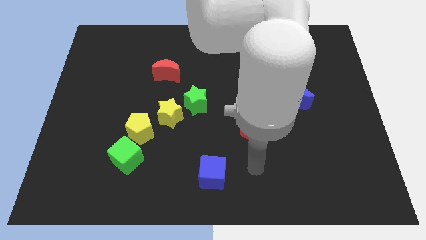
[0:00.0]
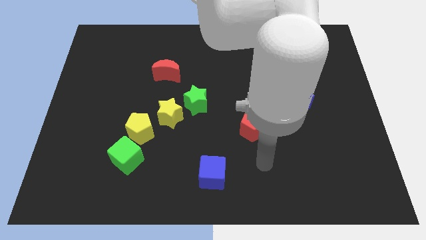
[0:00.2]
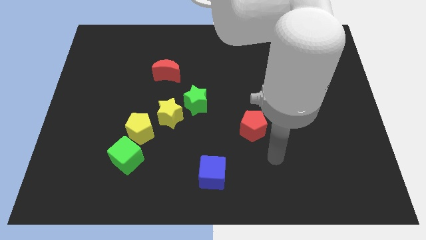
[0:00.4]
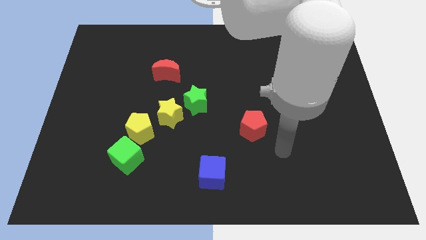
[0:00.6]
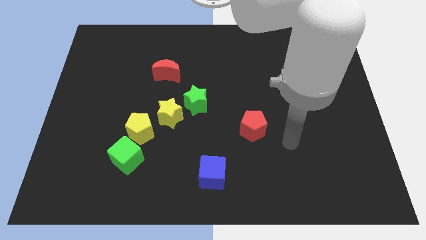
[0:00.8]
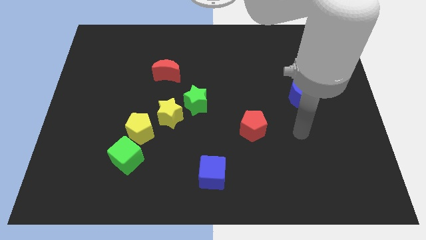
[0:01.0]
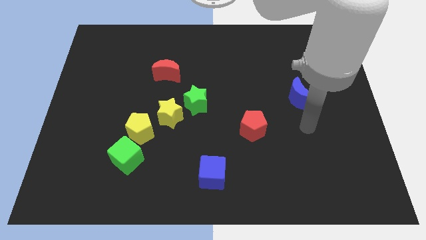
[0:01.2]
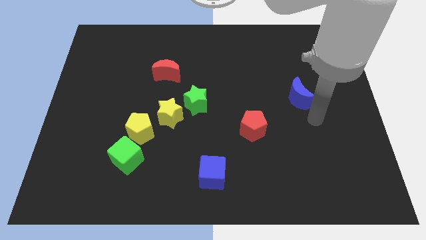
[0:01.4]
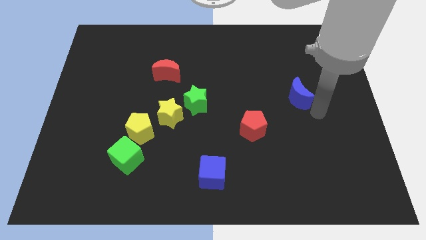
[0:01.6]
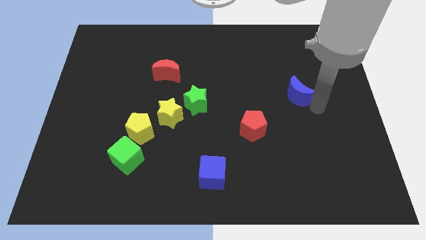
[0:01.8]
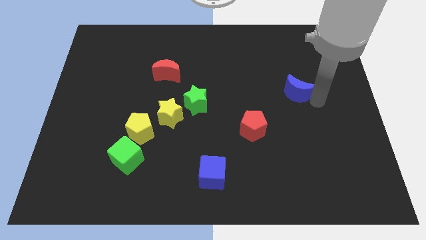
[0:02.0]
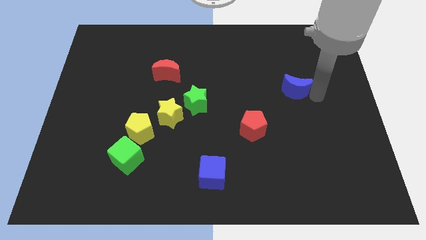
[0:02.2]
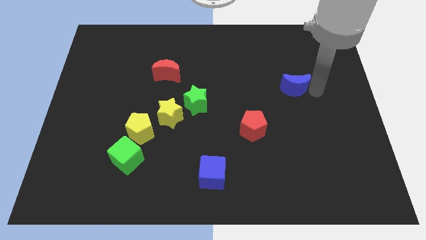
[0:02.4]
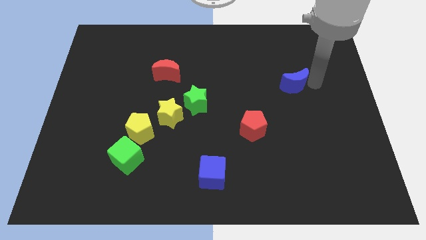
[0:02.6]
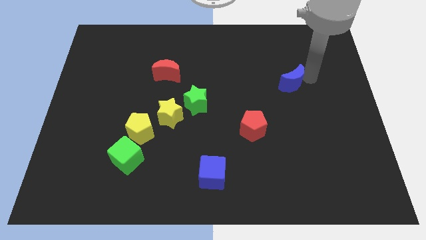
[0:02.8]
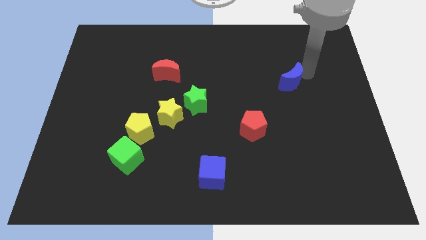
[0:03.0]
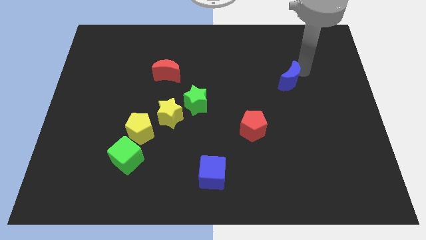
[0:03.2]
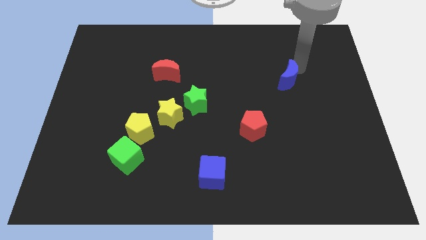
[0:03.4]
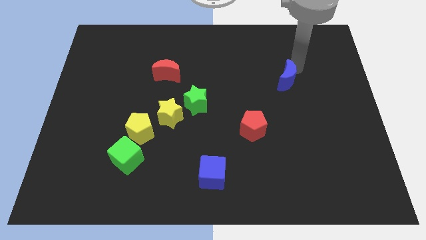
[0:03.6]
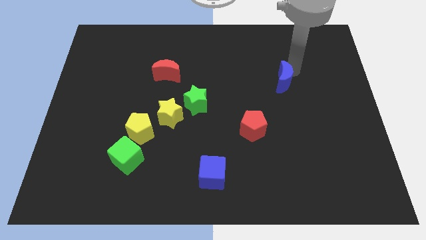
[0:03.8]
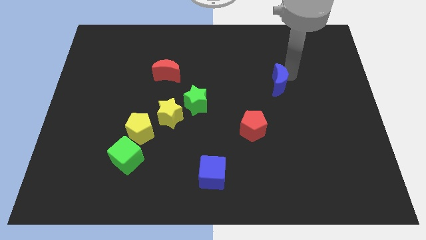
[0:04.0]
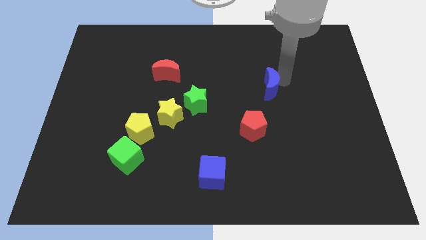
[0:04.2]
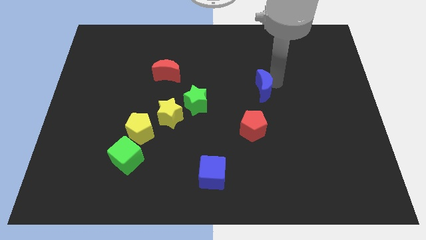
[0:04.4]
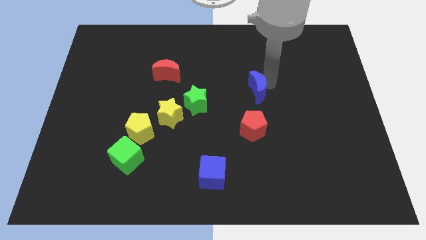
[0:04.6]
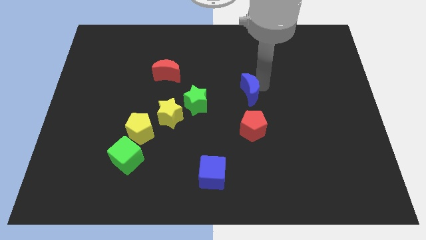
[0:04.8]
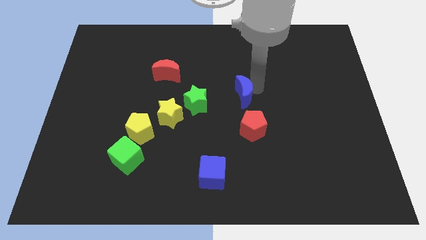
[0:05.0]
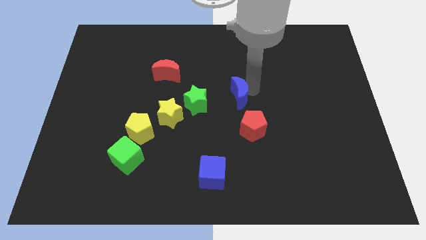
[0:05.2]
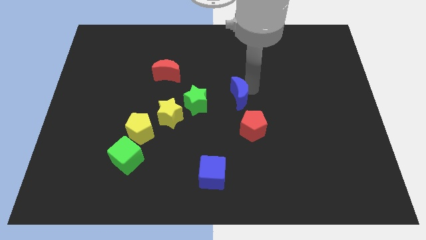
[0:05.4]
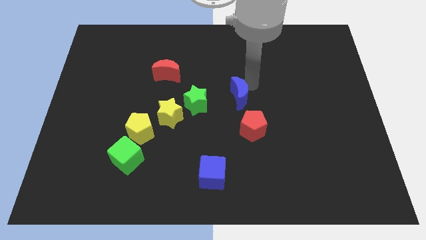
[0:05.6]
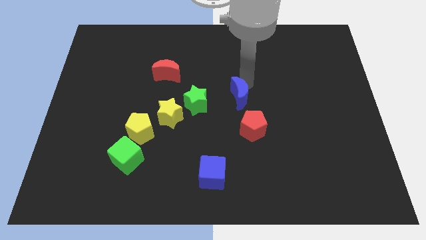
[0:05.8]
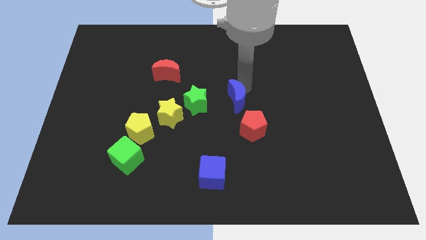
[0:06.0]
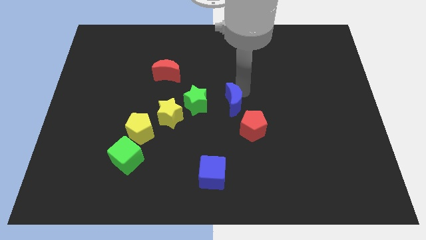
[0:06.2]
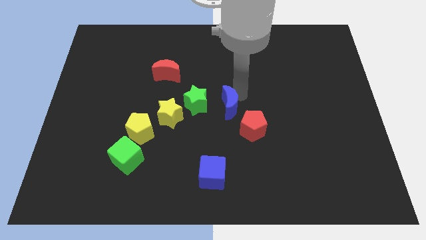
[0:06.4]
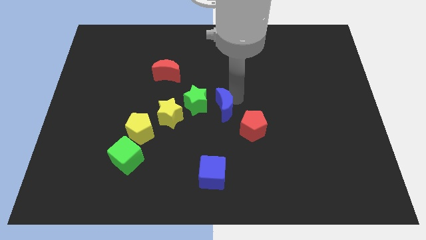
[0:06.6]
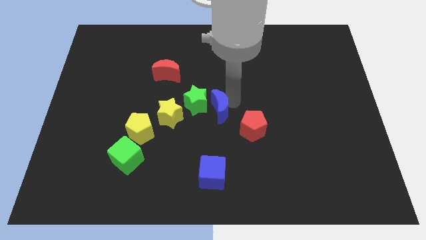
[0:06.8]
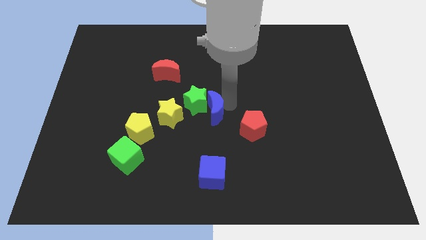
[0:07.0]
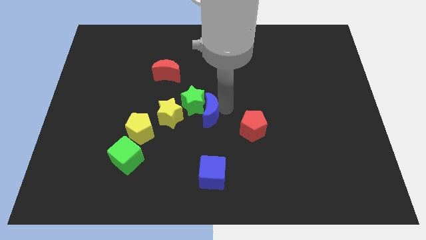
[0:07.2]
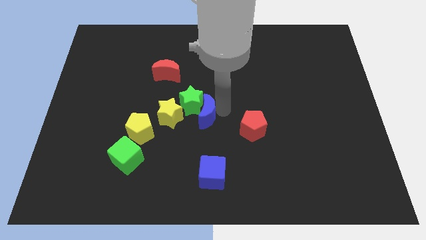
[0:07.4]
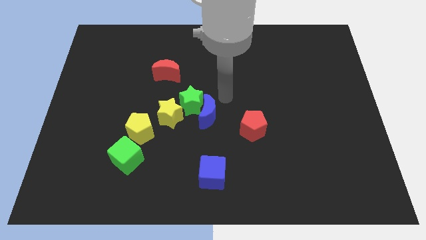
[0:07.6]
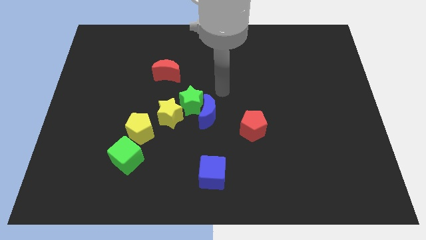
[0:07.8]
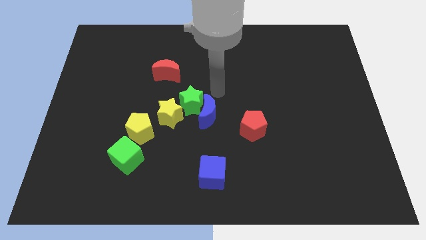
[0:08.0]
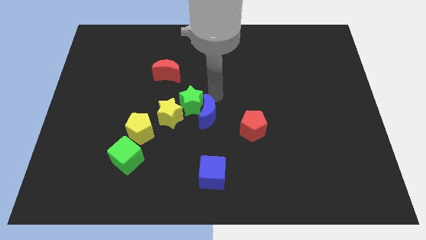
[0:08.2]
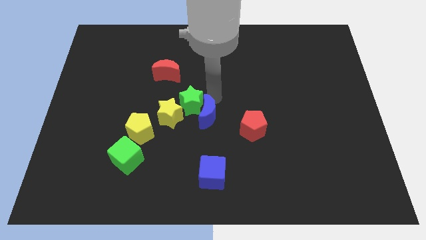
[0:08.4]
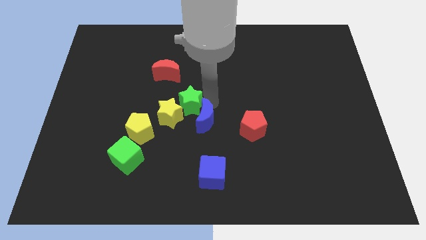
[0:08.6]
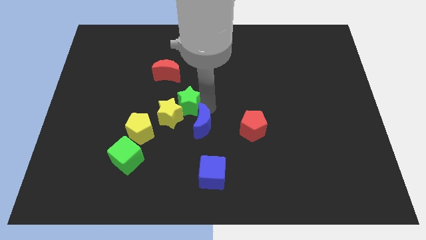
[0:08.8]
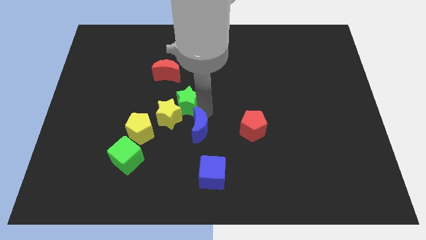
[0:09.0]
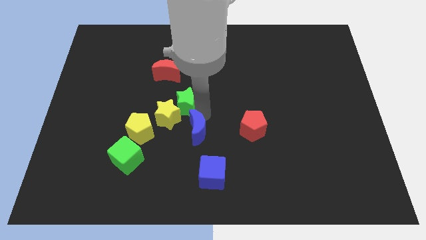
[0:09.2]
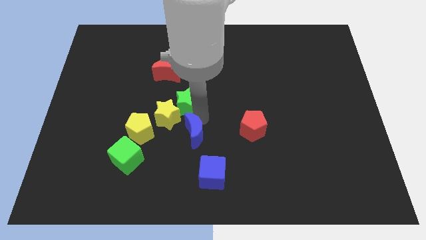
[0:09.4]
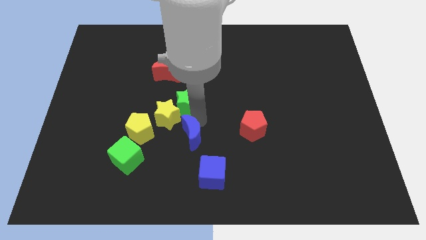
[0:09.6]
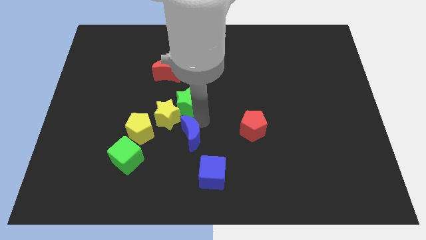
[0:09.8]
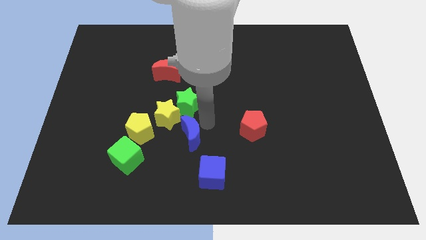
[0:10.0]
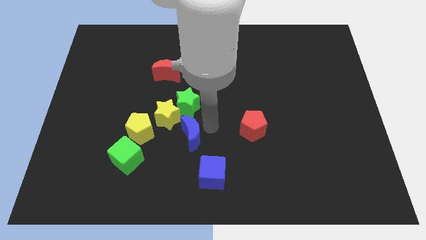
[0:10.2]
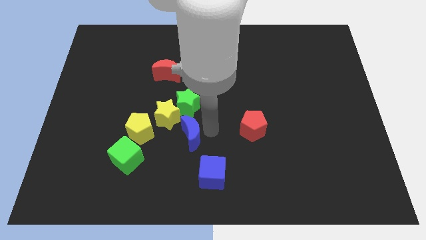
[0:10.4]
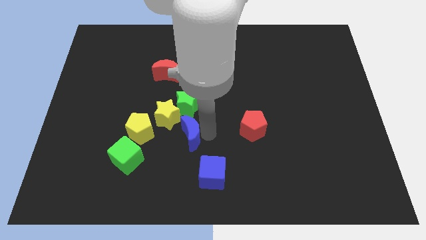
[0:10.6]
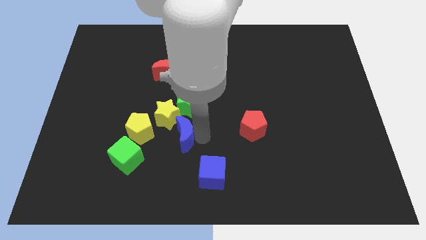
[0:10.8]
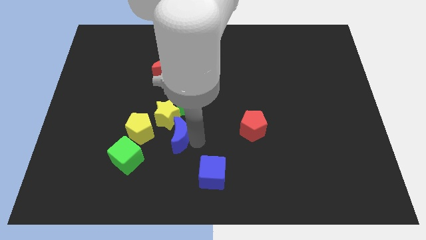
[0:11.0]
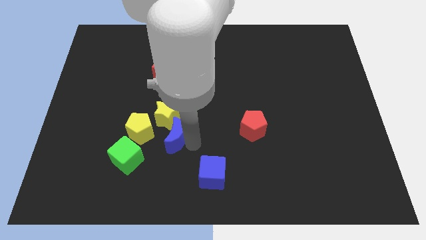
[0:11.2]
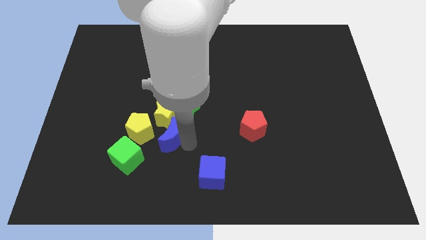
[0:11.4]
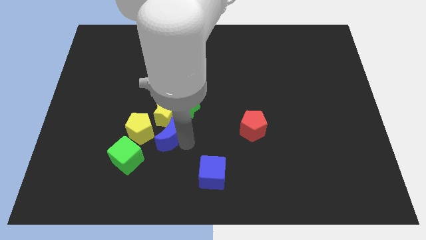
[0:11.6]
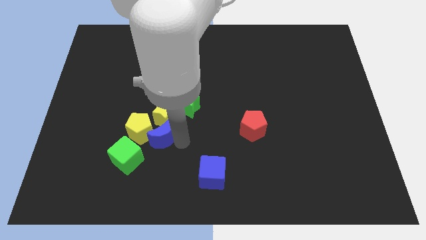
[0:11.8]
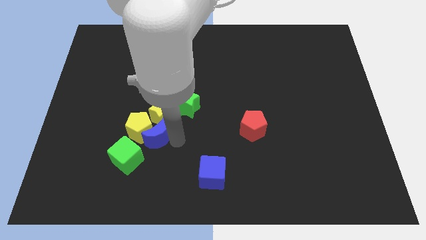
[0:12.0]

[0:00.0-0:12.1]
put the blue moon close to the yellow pentagon

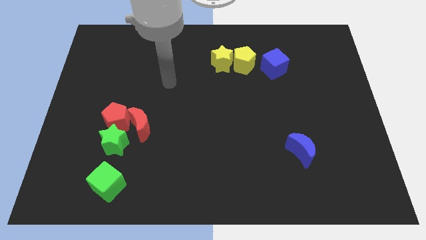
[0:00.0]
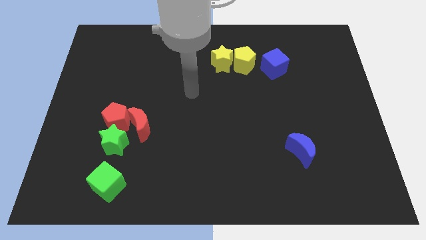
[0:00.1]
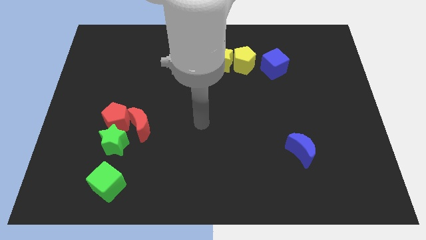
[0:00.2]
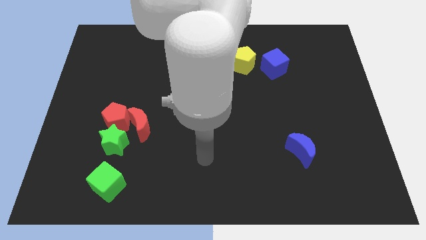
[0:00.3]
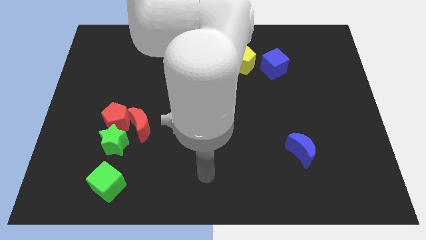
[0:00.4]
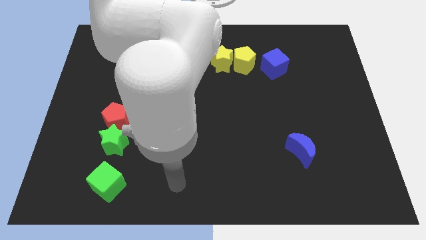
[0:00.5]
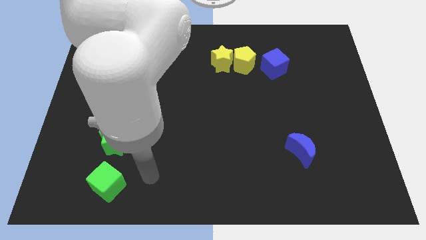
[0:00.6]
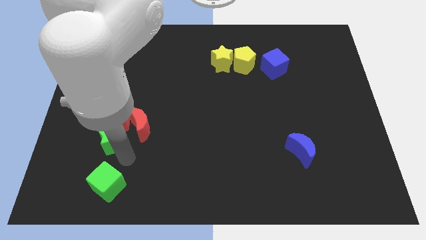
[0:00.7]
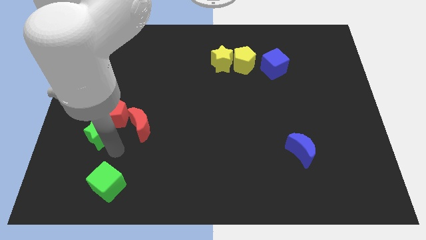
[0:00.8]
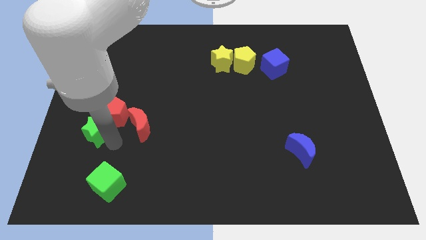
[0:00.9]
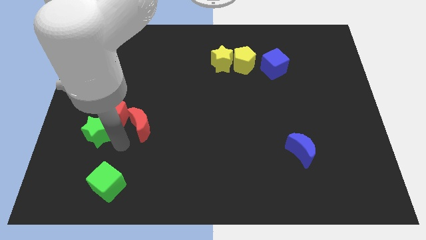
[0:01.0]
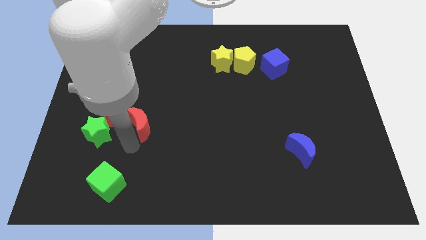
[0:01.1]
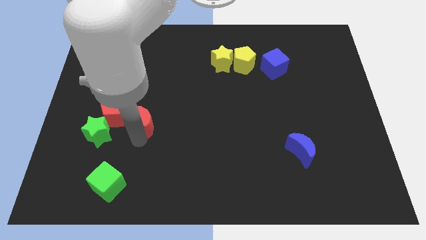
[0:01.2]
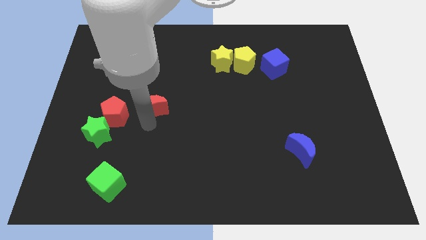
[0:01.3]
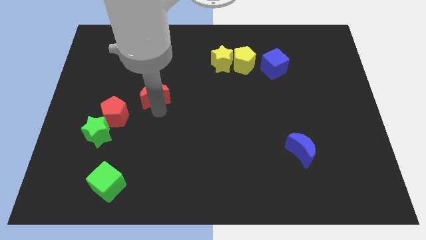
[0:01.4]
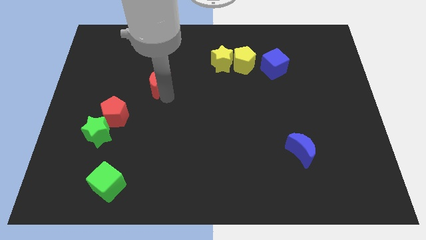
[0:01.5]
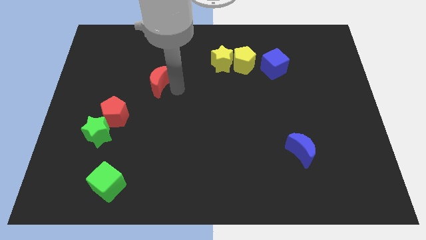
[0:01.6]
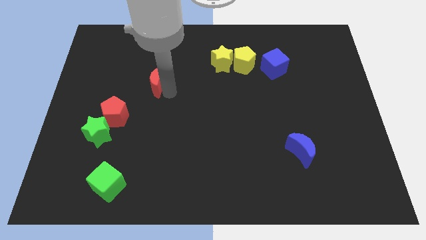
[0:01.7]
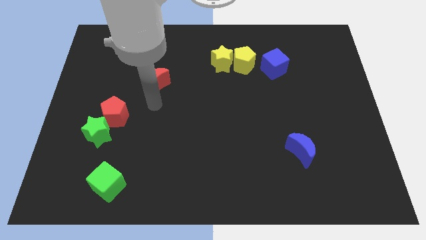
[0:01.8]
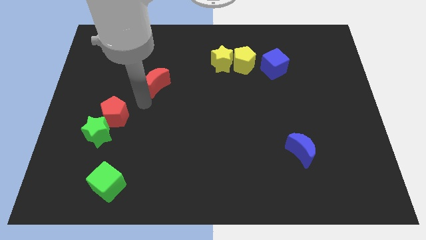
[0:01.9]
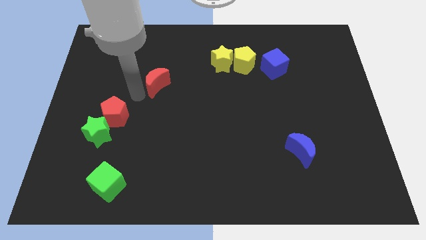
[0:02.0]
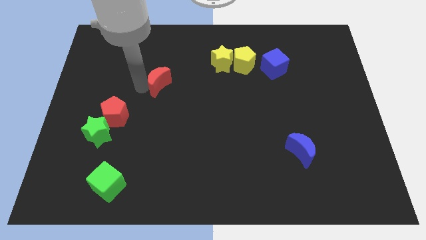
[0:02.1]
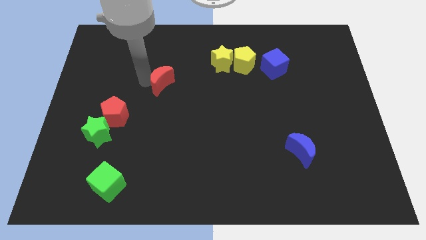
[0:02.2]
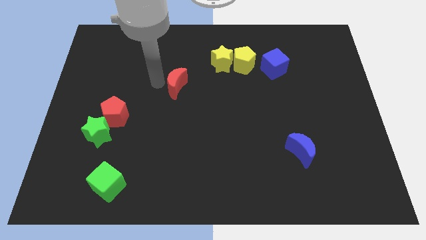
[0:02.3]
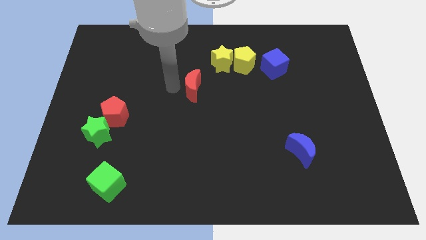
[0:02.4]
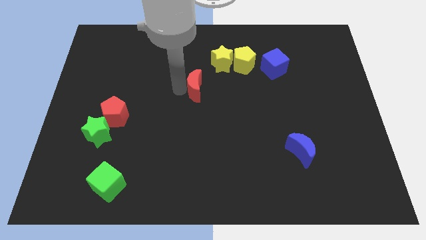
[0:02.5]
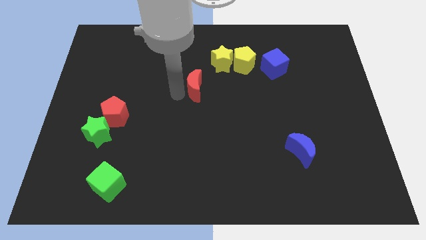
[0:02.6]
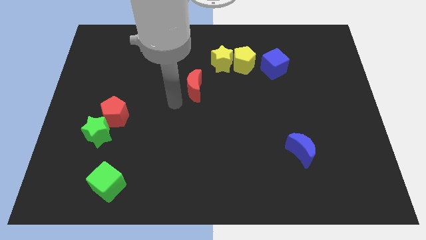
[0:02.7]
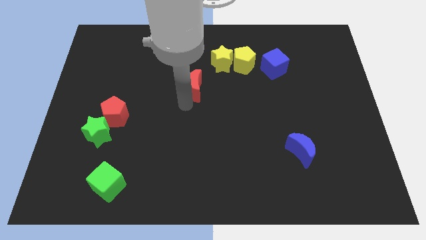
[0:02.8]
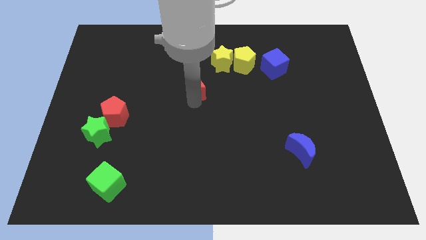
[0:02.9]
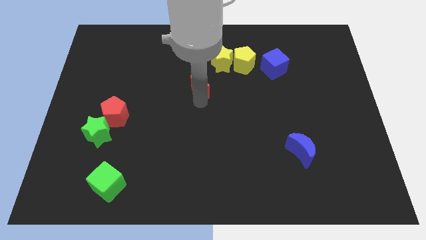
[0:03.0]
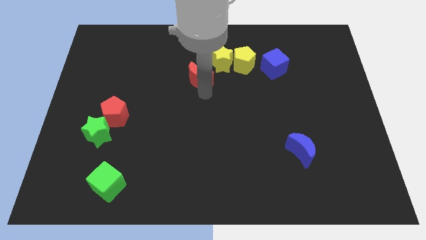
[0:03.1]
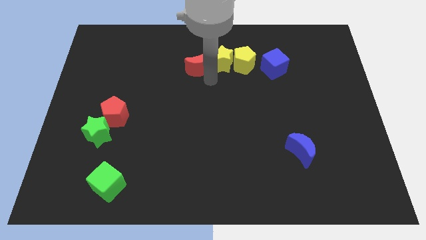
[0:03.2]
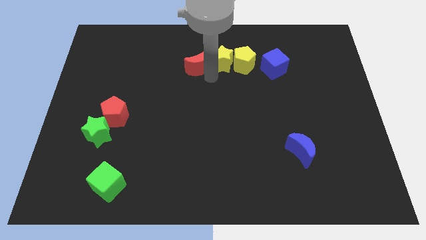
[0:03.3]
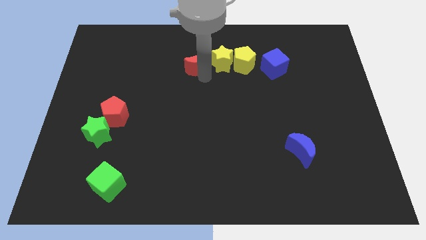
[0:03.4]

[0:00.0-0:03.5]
put the red moon next to the yellow star
